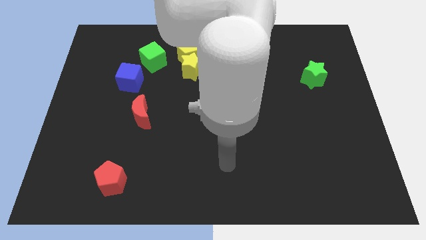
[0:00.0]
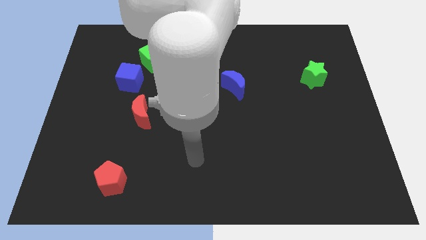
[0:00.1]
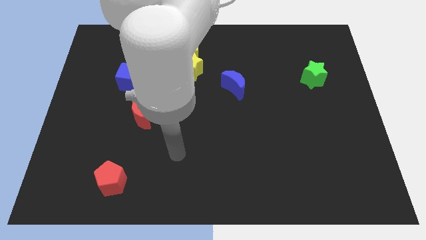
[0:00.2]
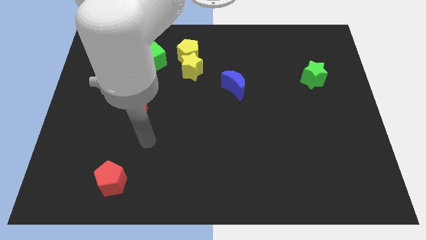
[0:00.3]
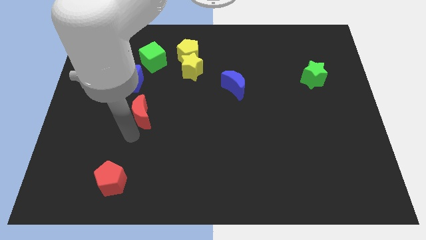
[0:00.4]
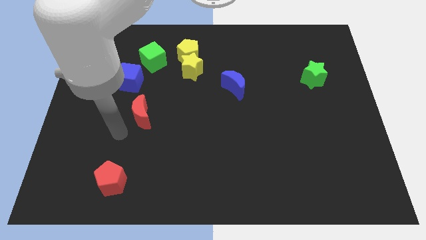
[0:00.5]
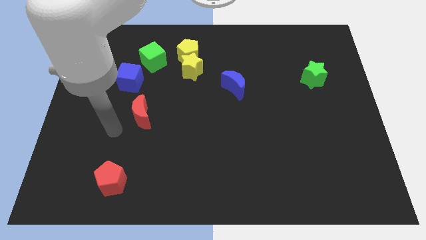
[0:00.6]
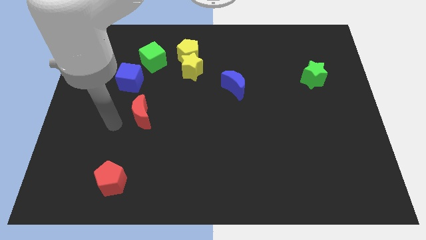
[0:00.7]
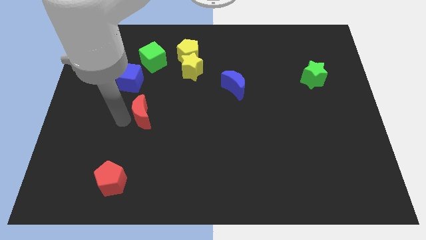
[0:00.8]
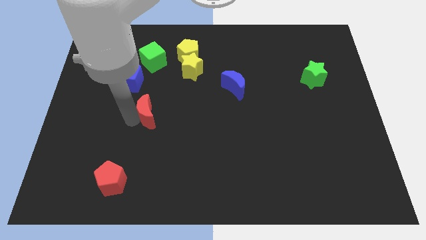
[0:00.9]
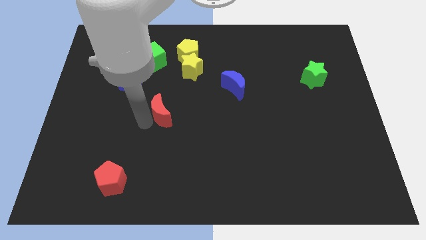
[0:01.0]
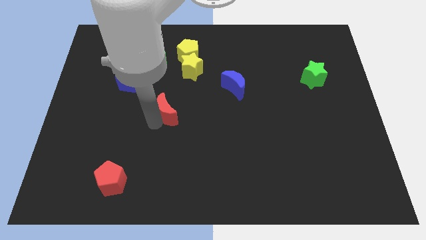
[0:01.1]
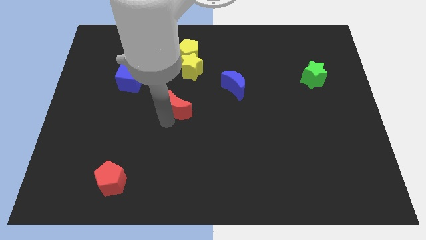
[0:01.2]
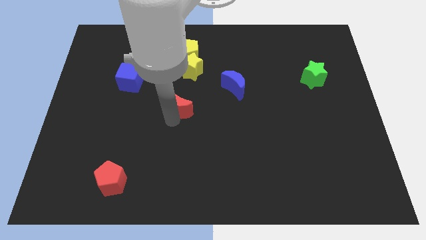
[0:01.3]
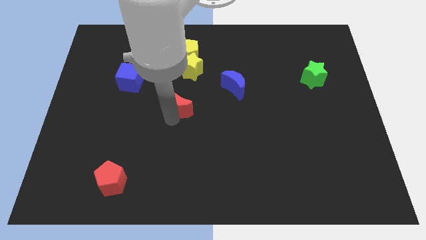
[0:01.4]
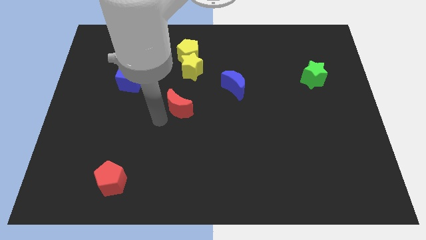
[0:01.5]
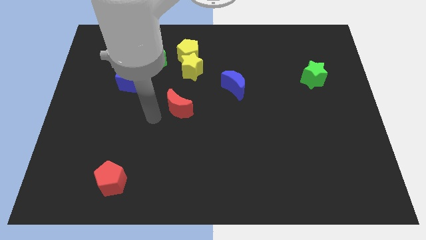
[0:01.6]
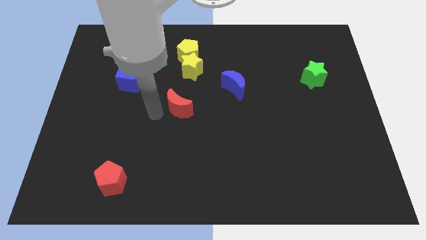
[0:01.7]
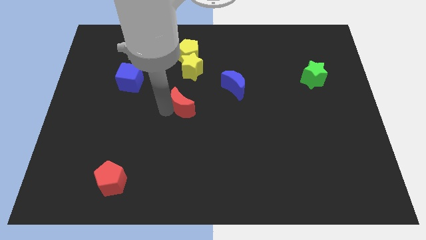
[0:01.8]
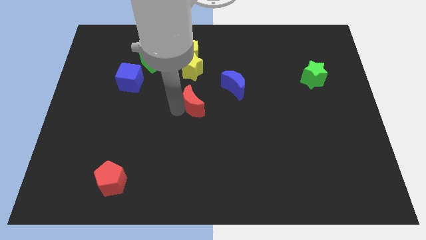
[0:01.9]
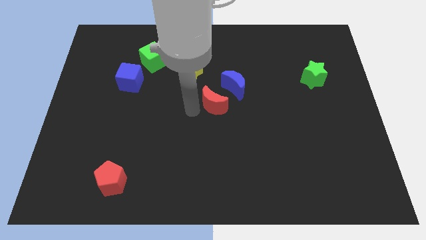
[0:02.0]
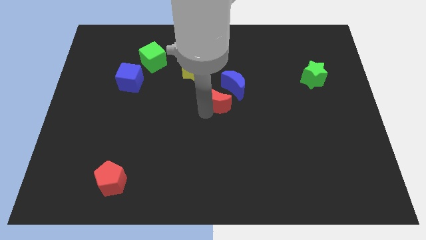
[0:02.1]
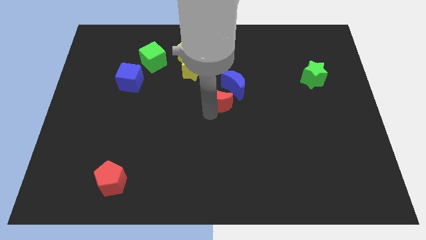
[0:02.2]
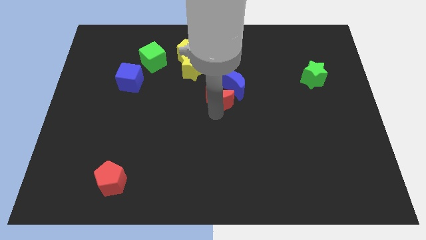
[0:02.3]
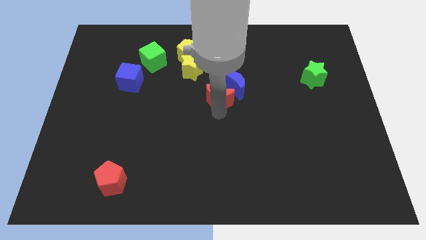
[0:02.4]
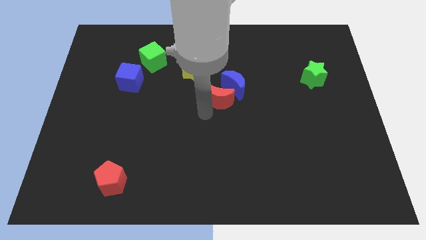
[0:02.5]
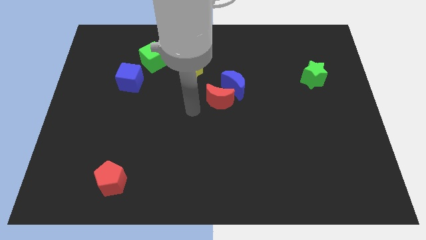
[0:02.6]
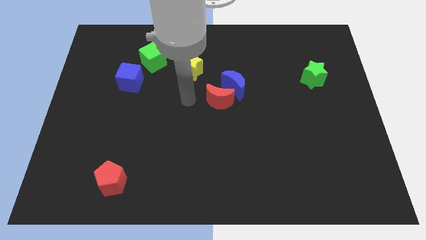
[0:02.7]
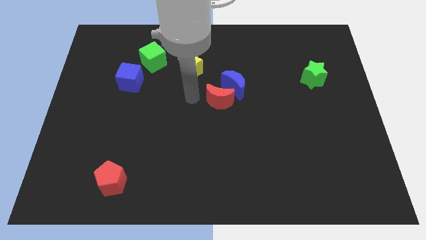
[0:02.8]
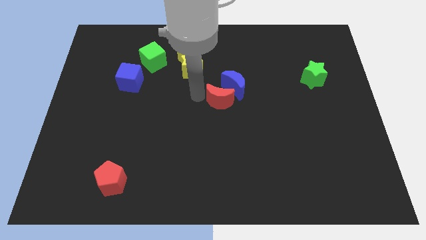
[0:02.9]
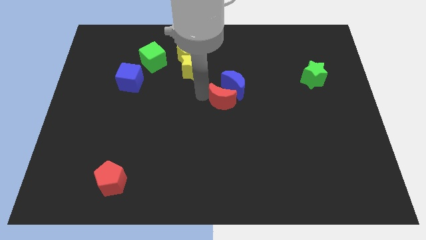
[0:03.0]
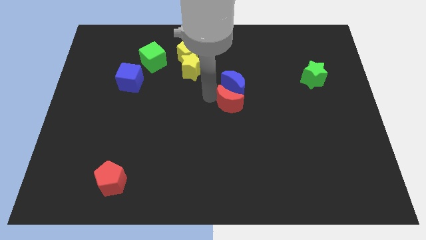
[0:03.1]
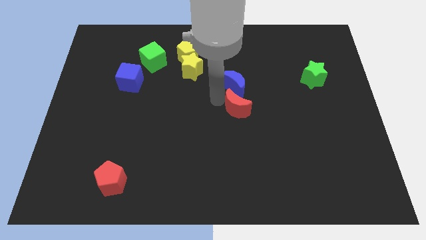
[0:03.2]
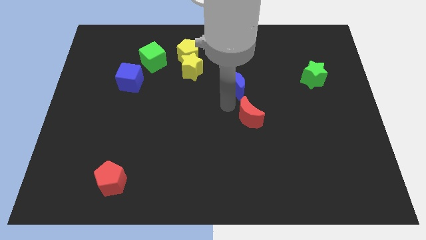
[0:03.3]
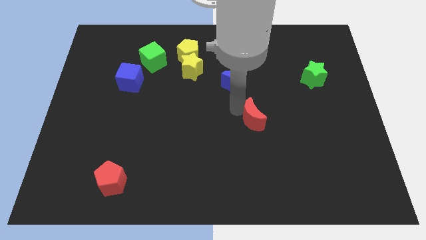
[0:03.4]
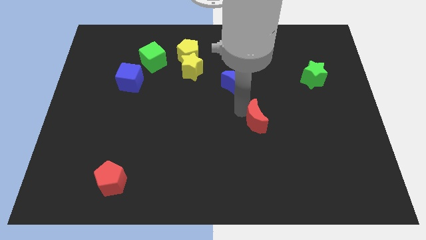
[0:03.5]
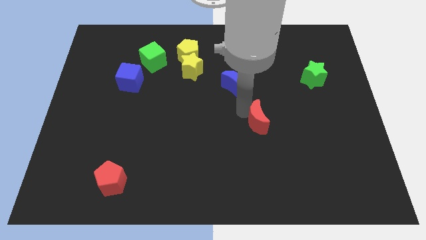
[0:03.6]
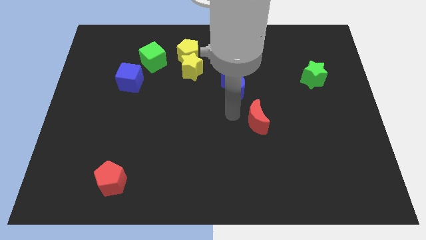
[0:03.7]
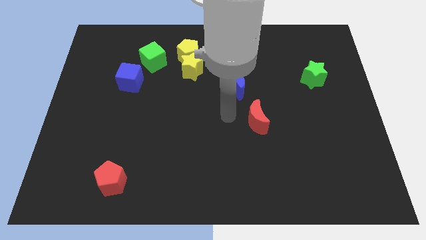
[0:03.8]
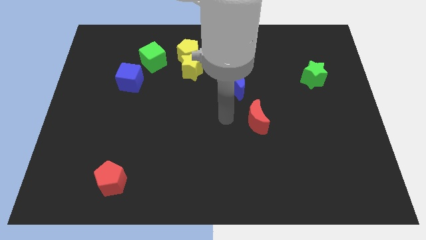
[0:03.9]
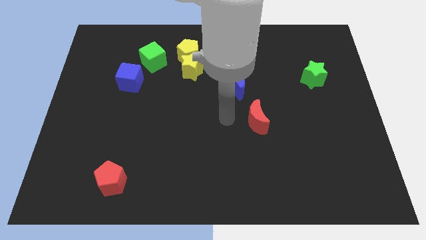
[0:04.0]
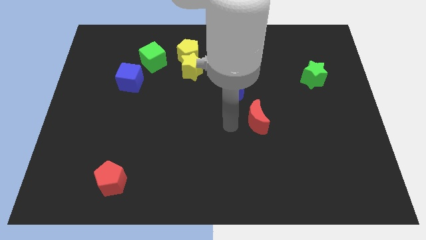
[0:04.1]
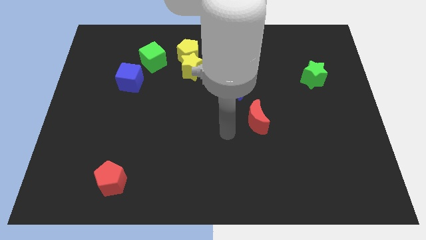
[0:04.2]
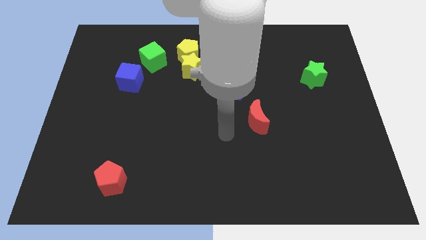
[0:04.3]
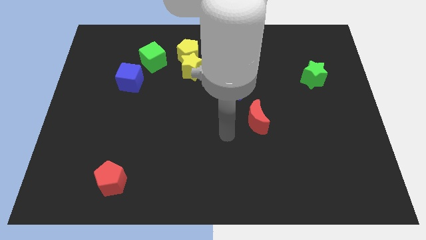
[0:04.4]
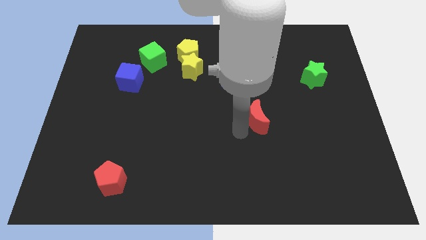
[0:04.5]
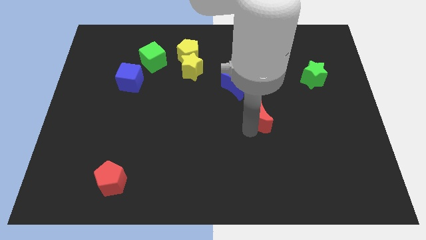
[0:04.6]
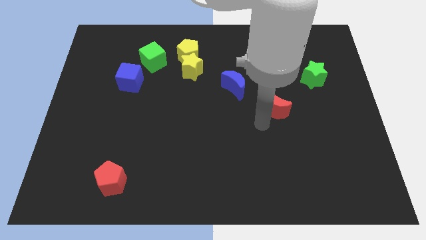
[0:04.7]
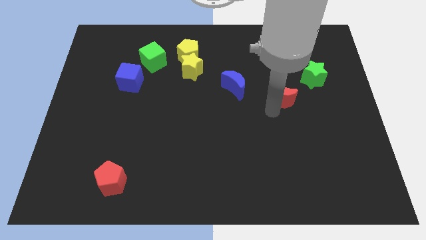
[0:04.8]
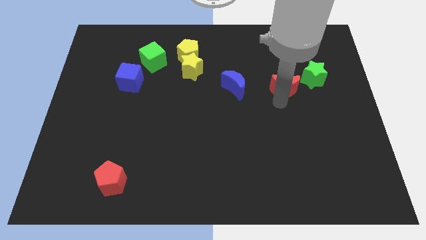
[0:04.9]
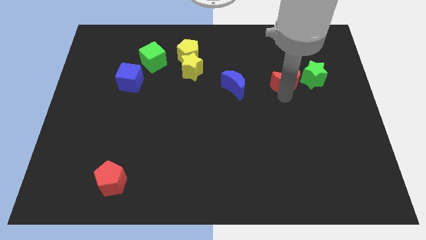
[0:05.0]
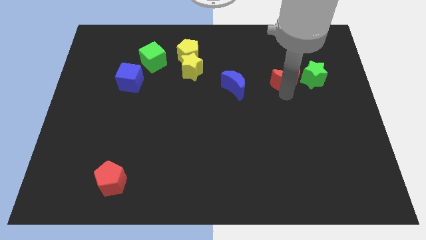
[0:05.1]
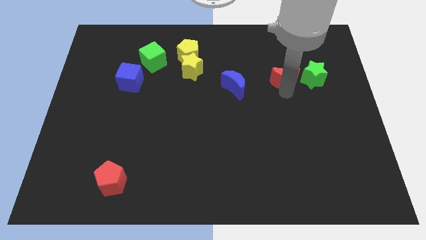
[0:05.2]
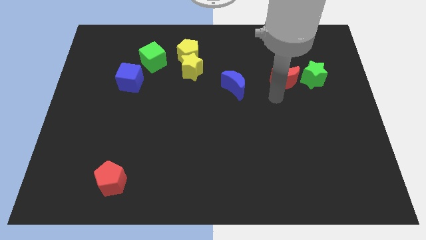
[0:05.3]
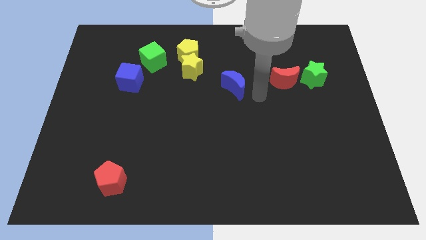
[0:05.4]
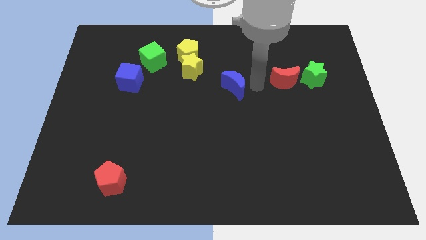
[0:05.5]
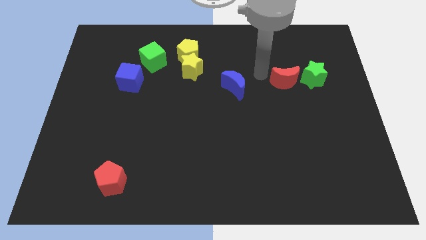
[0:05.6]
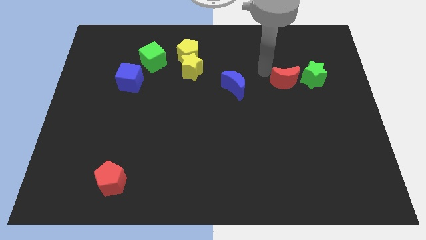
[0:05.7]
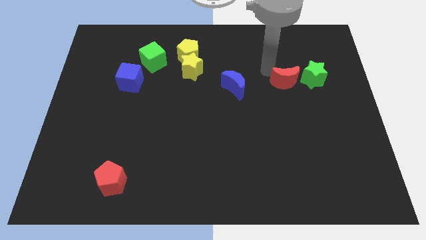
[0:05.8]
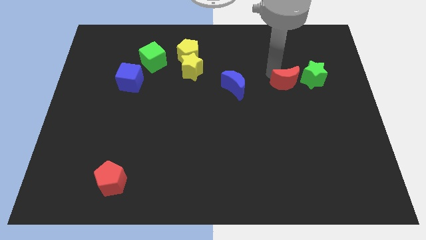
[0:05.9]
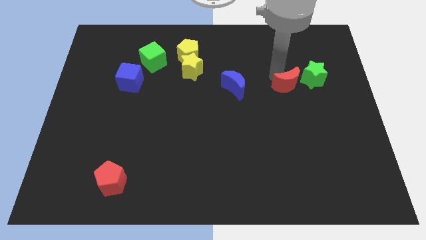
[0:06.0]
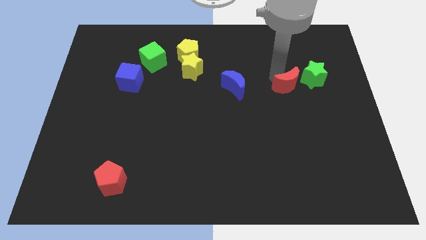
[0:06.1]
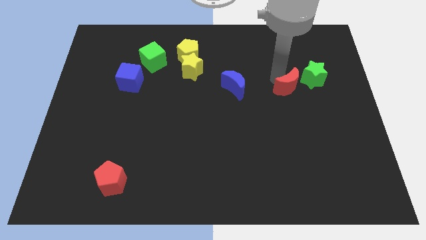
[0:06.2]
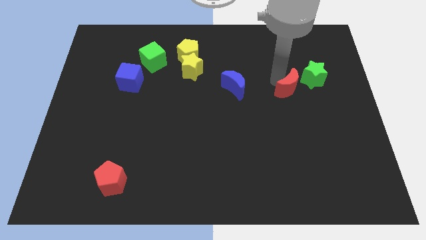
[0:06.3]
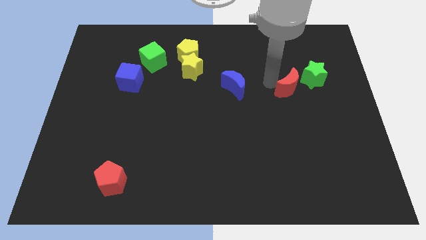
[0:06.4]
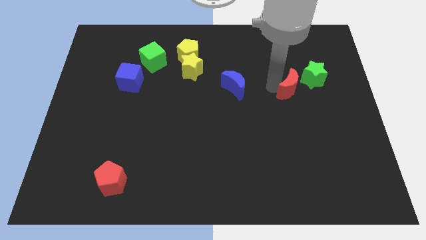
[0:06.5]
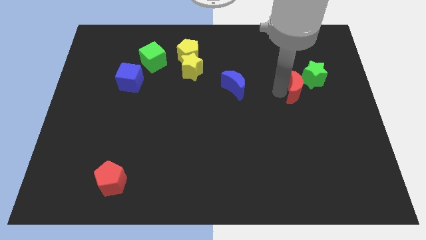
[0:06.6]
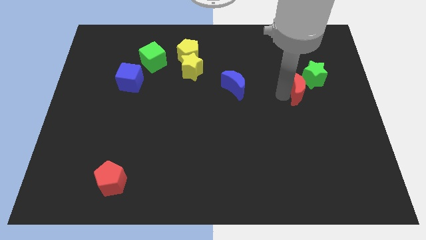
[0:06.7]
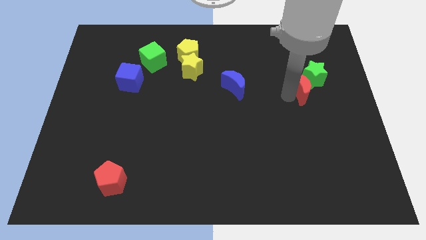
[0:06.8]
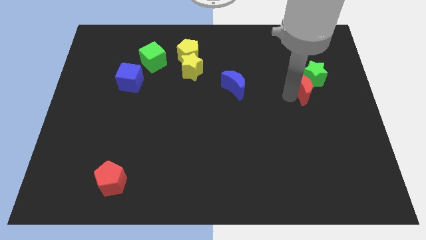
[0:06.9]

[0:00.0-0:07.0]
move the red moon close to the green star

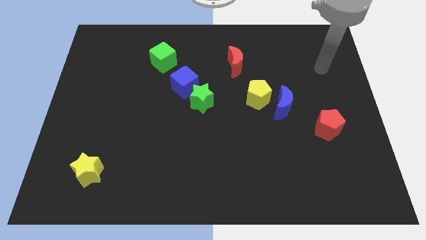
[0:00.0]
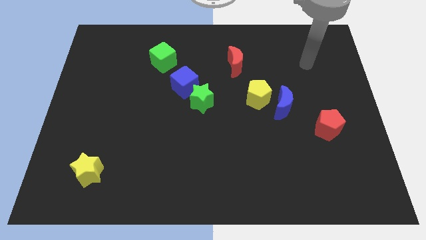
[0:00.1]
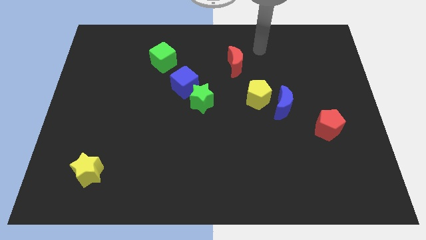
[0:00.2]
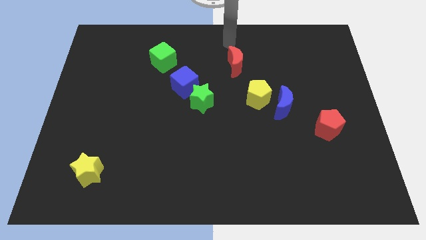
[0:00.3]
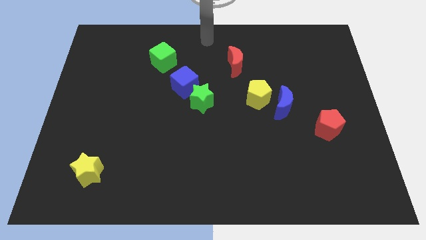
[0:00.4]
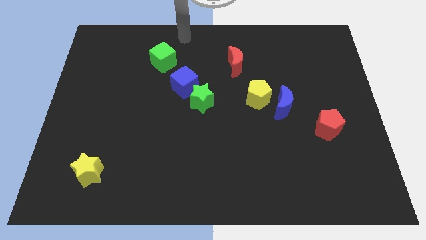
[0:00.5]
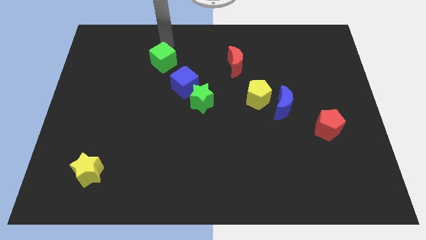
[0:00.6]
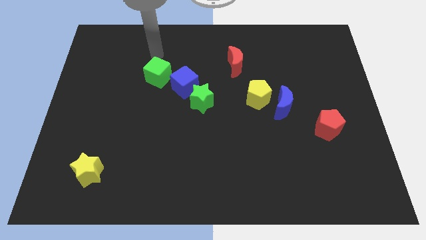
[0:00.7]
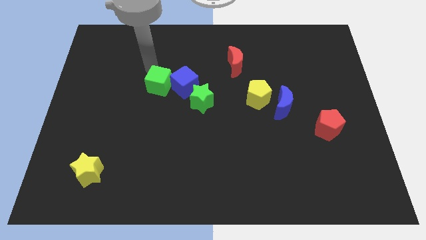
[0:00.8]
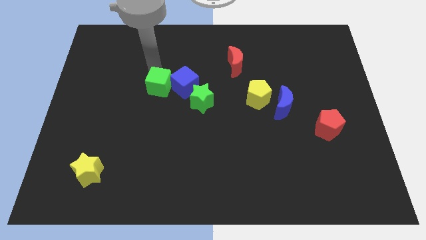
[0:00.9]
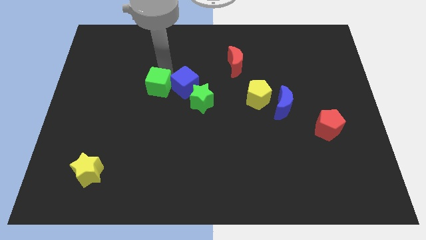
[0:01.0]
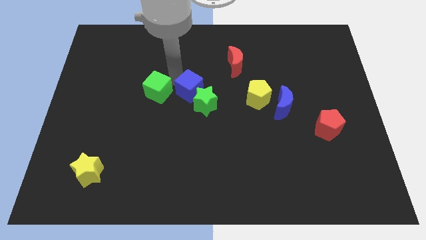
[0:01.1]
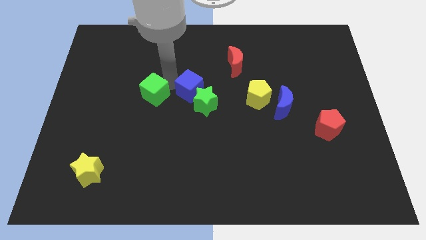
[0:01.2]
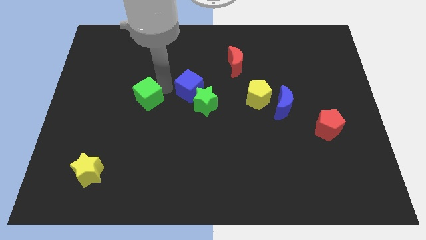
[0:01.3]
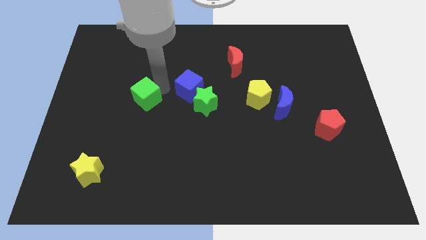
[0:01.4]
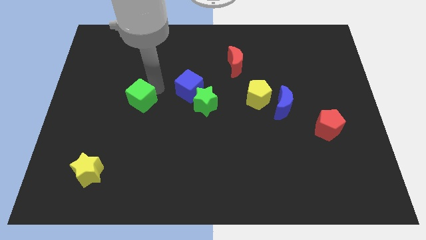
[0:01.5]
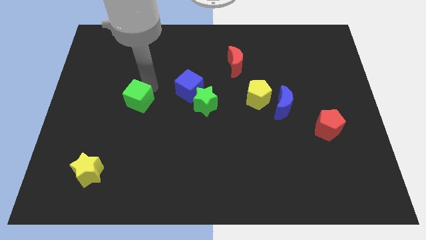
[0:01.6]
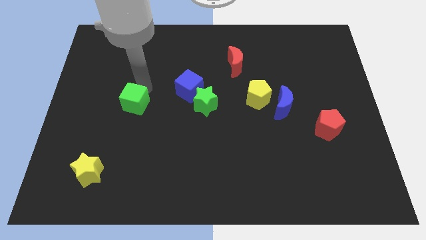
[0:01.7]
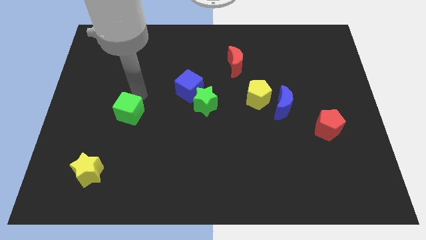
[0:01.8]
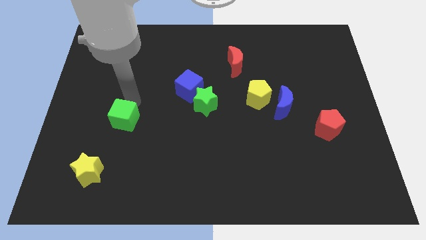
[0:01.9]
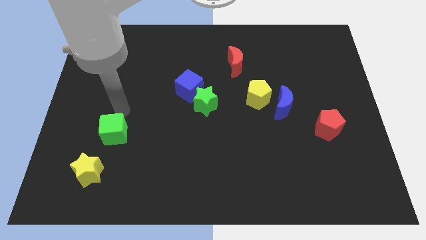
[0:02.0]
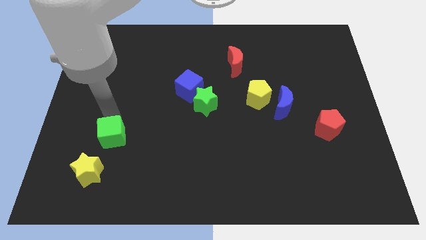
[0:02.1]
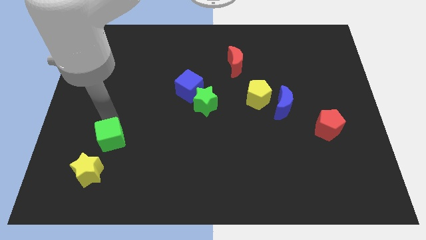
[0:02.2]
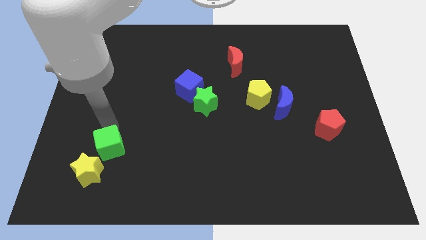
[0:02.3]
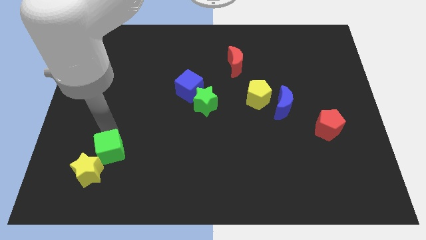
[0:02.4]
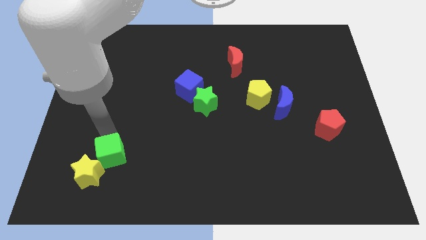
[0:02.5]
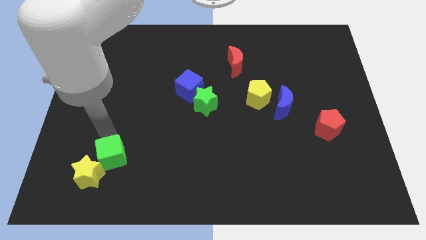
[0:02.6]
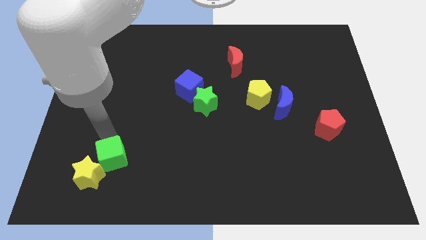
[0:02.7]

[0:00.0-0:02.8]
move the green cube to the yellow star
